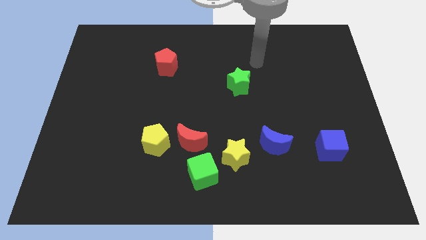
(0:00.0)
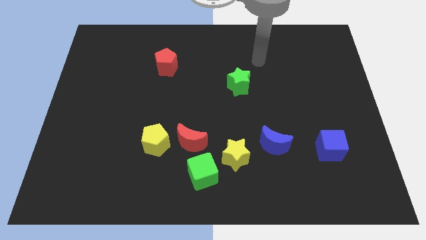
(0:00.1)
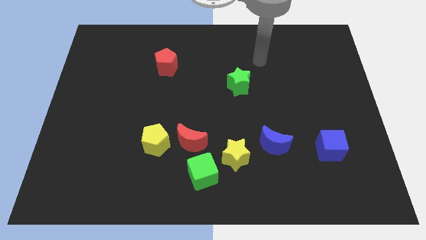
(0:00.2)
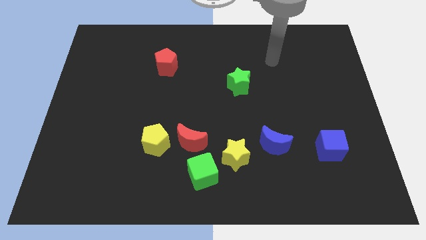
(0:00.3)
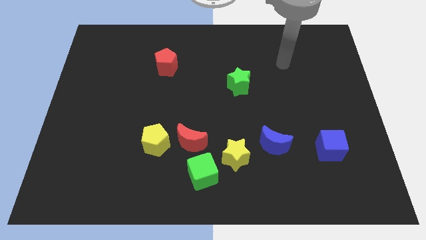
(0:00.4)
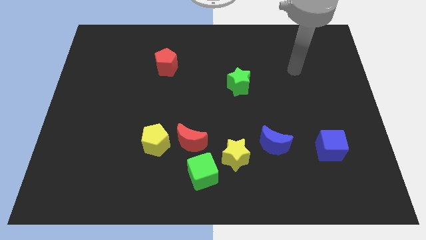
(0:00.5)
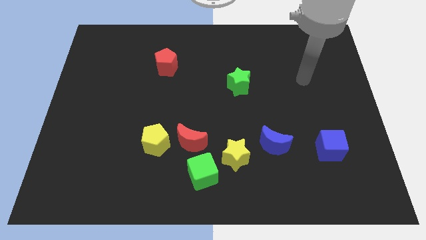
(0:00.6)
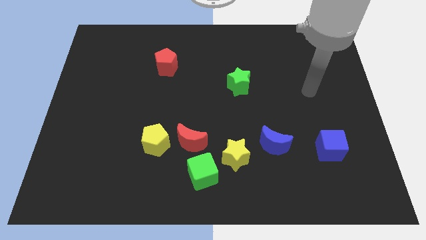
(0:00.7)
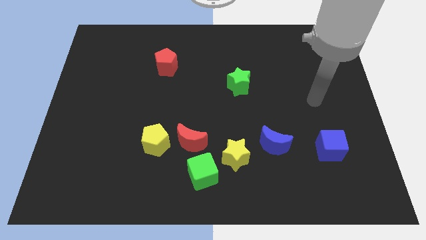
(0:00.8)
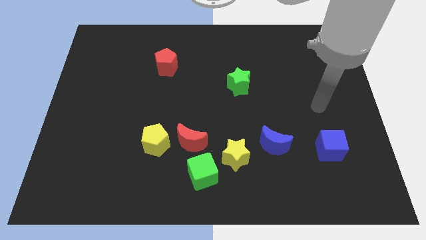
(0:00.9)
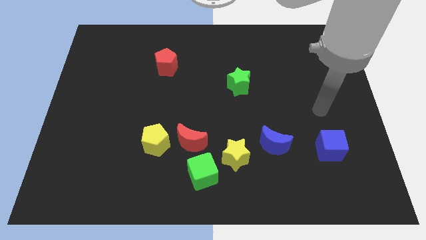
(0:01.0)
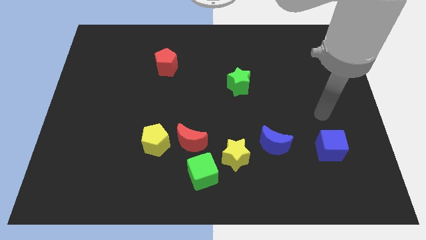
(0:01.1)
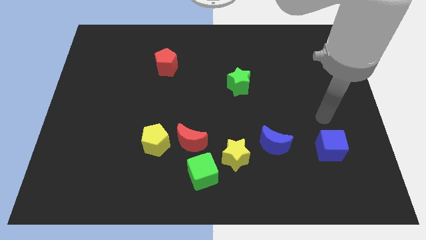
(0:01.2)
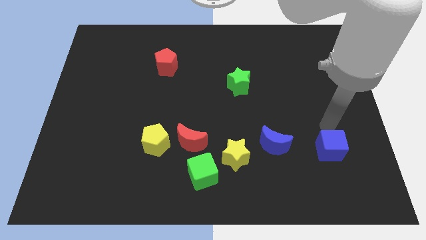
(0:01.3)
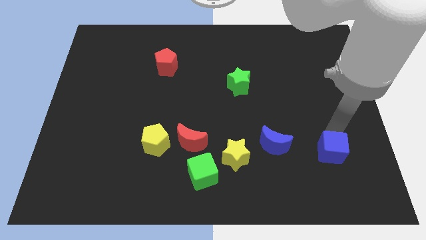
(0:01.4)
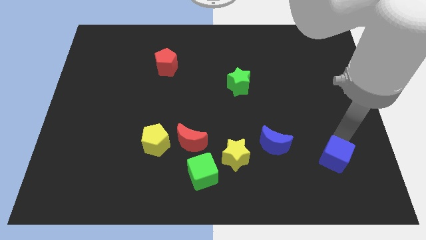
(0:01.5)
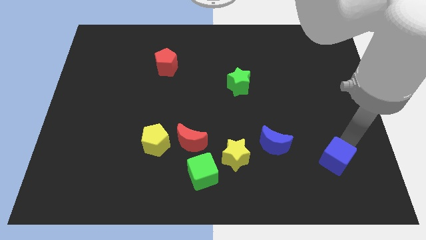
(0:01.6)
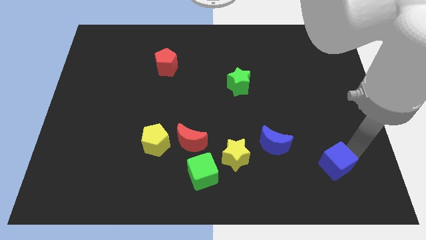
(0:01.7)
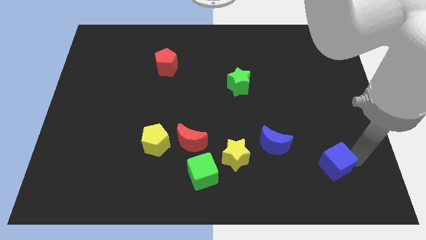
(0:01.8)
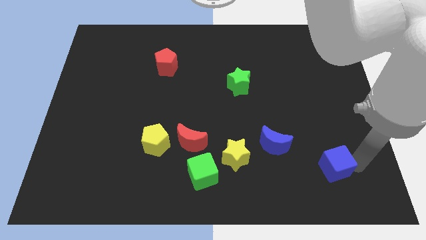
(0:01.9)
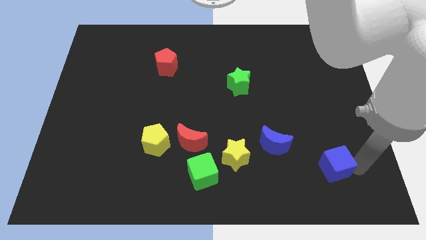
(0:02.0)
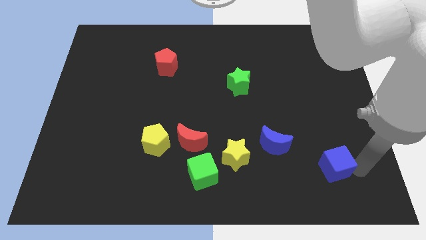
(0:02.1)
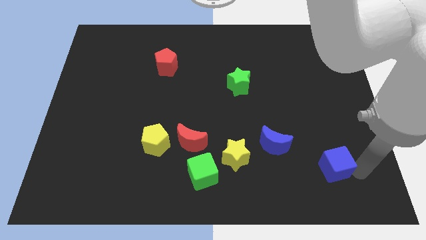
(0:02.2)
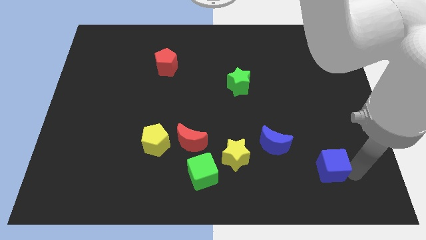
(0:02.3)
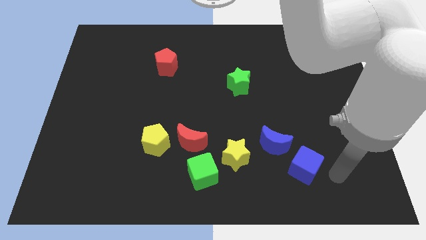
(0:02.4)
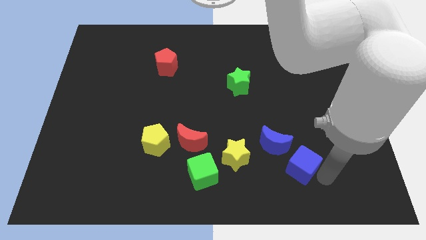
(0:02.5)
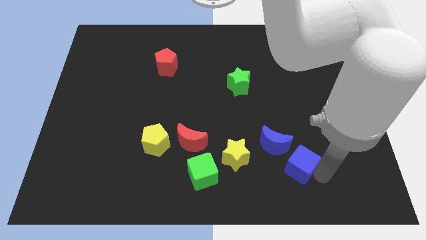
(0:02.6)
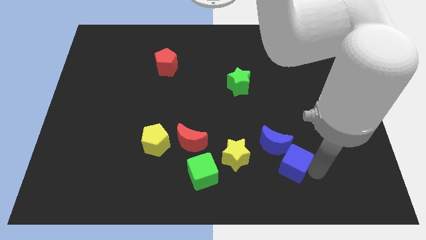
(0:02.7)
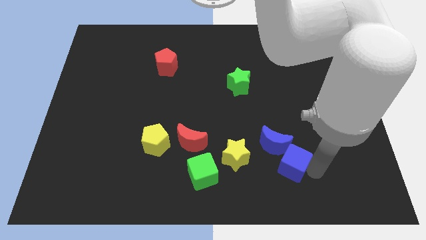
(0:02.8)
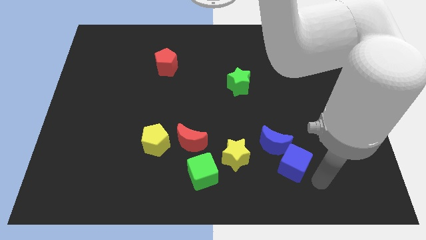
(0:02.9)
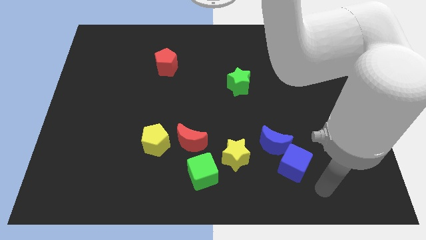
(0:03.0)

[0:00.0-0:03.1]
move the blue cube slightly into the right side of the blue crescent

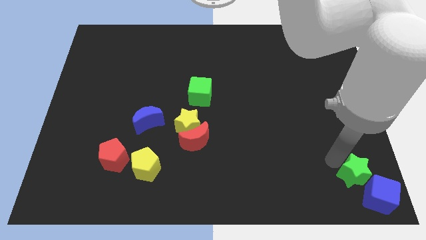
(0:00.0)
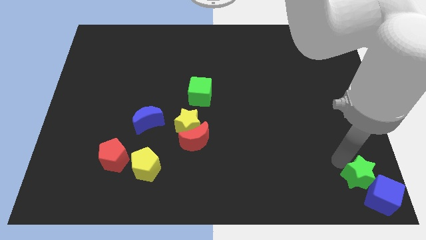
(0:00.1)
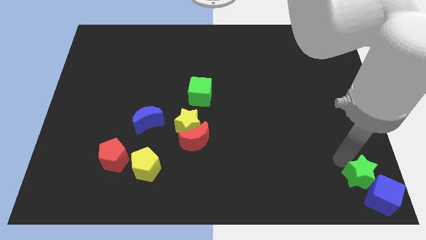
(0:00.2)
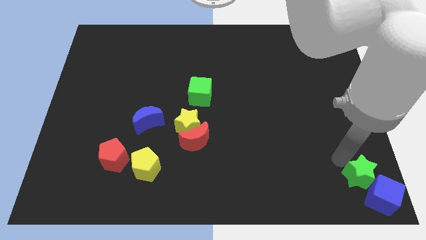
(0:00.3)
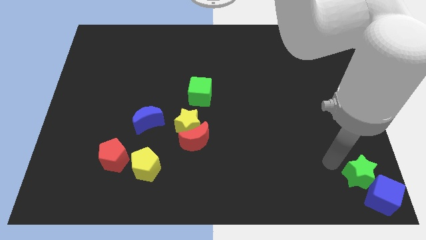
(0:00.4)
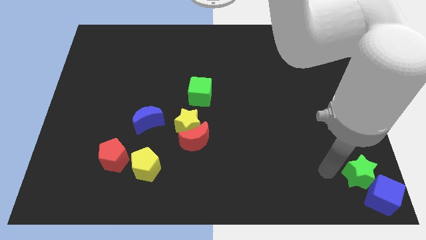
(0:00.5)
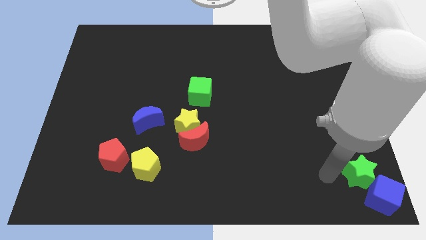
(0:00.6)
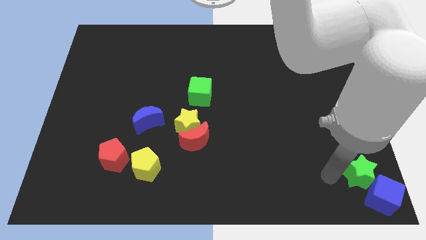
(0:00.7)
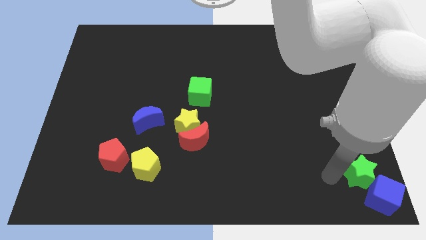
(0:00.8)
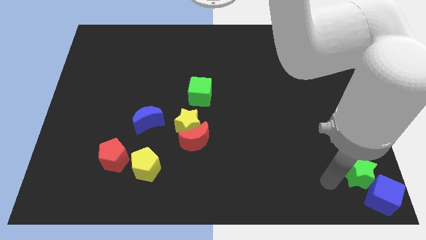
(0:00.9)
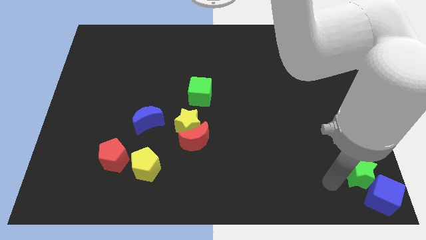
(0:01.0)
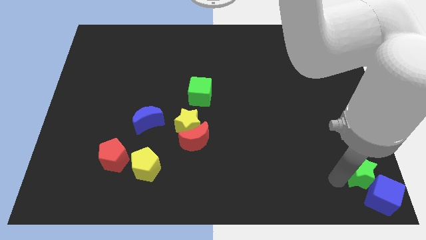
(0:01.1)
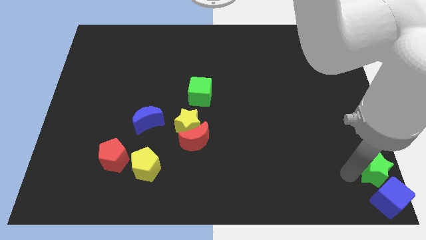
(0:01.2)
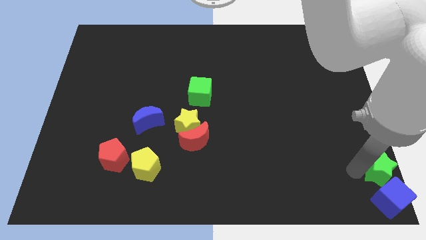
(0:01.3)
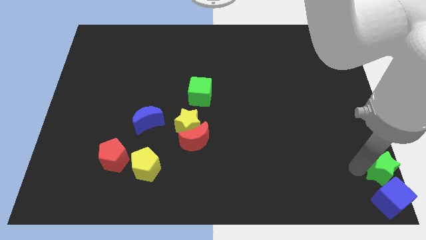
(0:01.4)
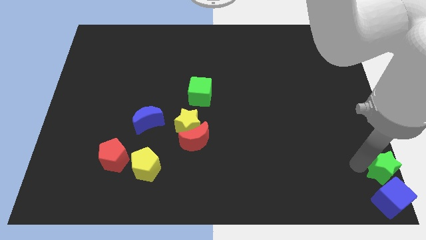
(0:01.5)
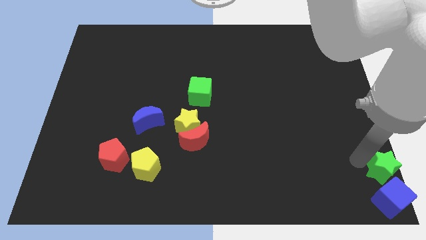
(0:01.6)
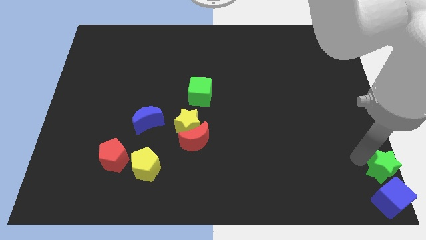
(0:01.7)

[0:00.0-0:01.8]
push green star and blue cube to the left of the board

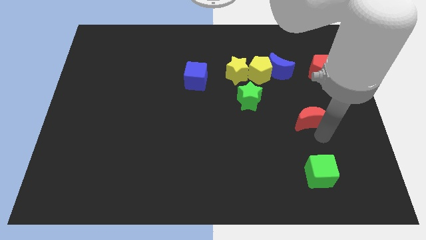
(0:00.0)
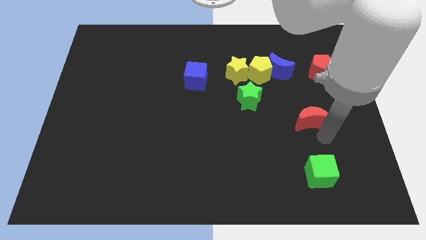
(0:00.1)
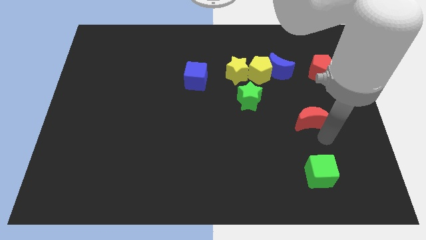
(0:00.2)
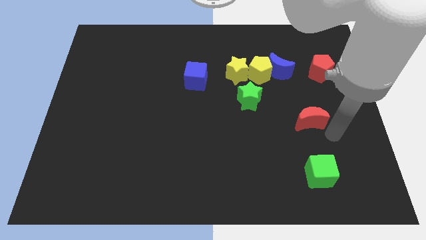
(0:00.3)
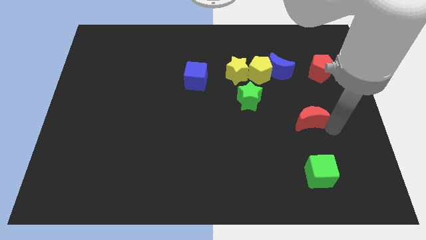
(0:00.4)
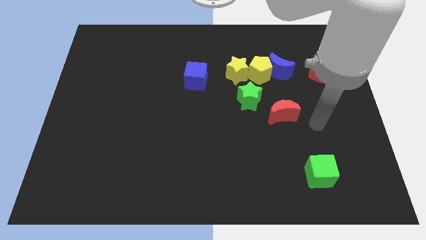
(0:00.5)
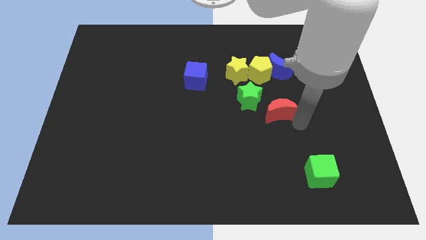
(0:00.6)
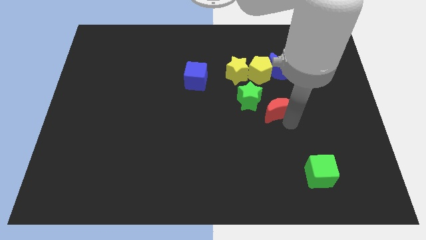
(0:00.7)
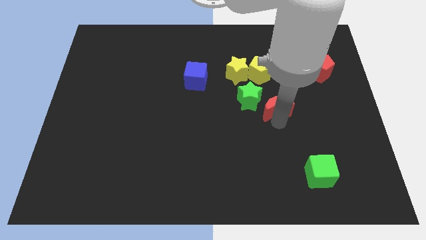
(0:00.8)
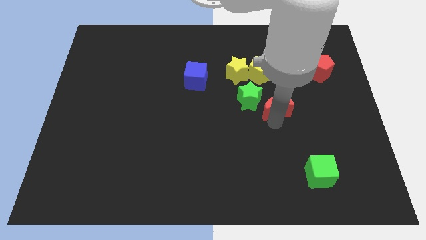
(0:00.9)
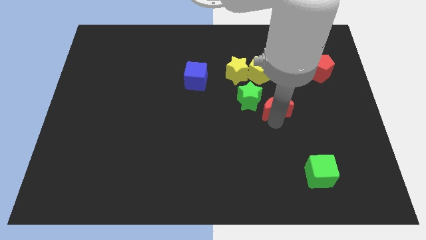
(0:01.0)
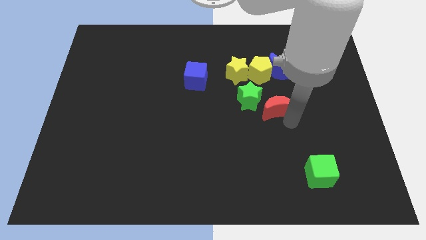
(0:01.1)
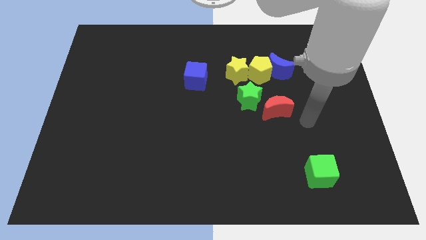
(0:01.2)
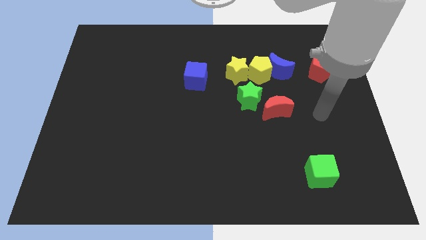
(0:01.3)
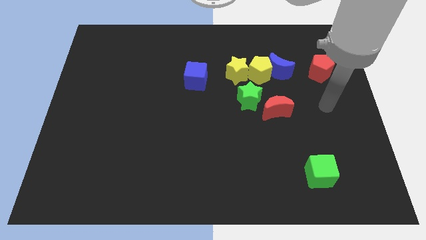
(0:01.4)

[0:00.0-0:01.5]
push the red crescent towards the green star

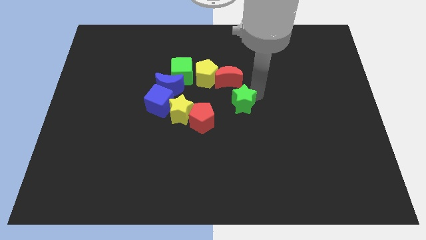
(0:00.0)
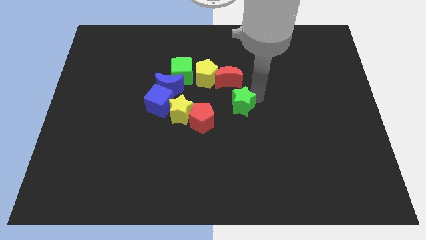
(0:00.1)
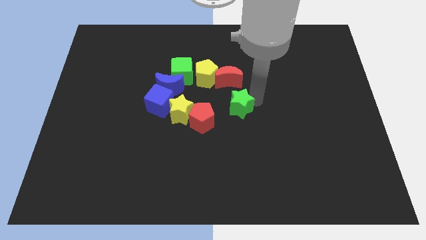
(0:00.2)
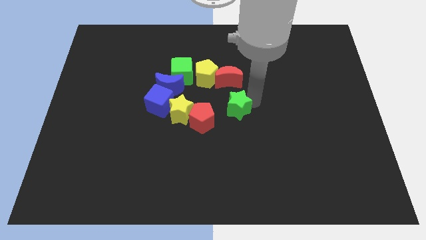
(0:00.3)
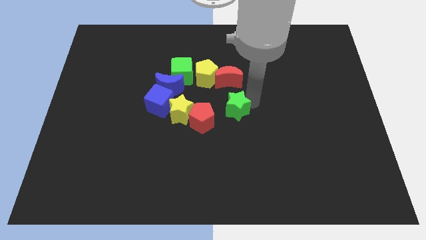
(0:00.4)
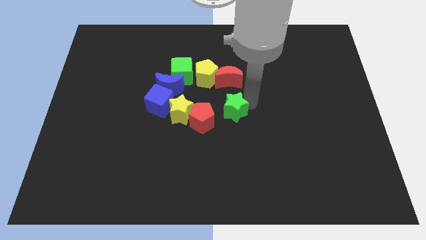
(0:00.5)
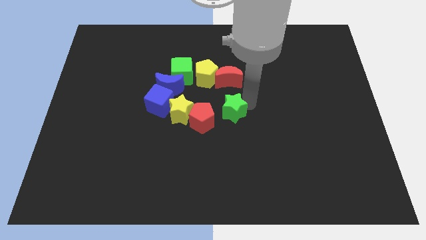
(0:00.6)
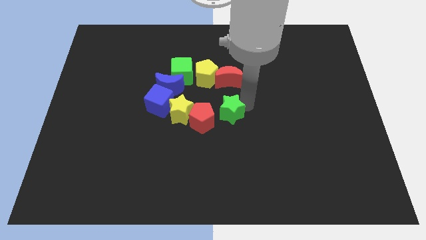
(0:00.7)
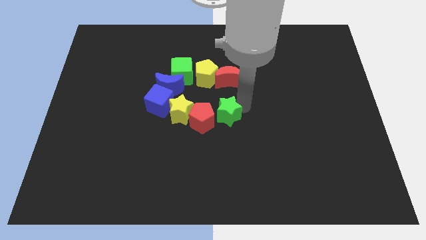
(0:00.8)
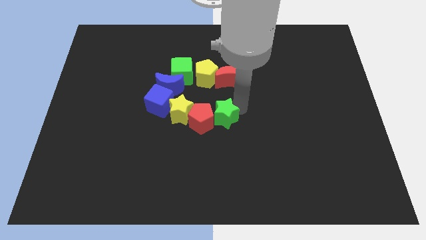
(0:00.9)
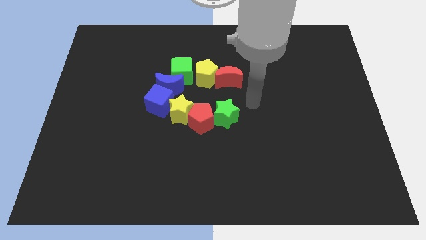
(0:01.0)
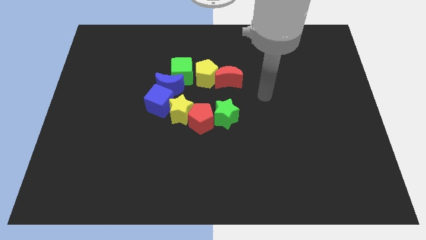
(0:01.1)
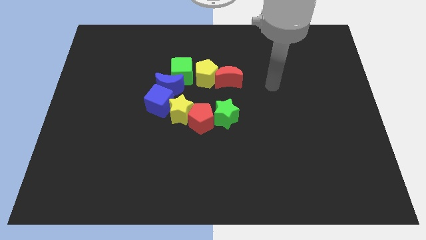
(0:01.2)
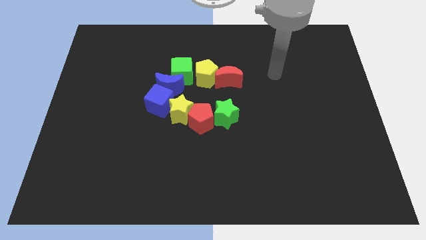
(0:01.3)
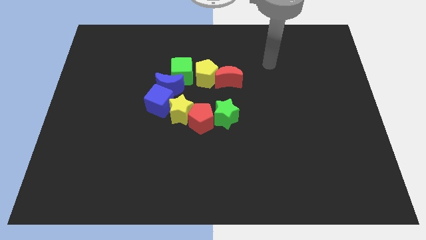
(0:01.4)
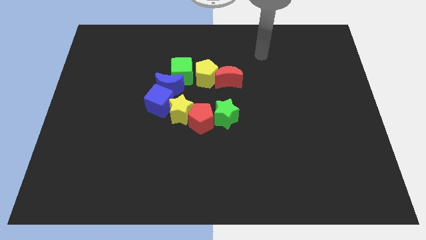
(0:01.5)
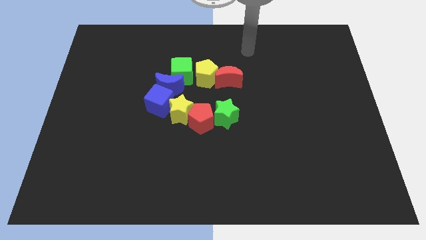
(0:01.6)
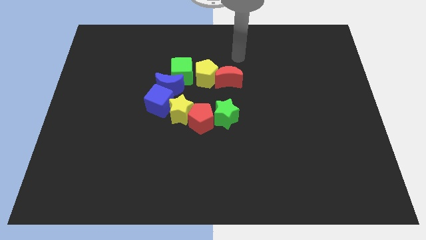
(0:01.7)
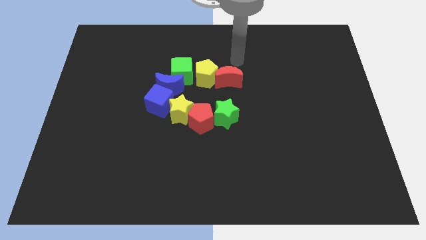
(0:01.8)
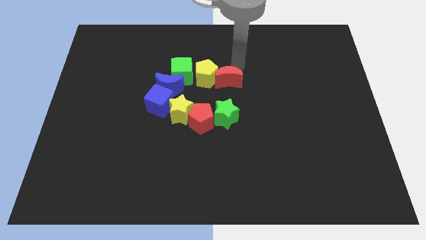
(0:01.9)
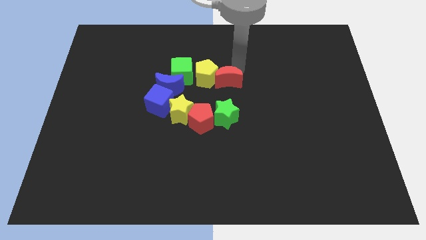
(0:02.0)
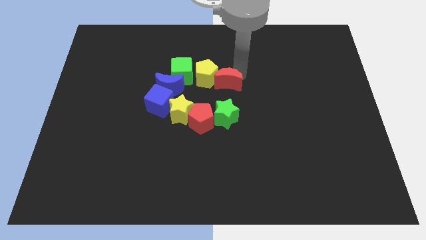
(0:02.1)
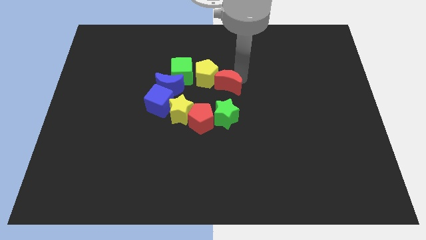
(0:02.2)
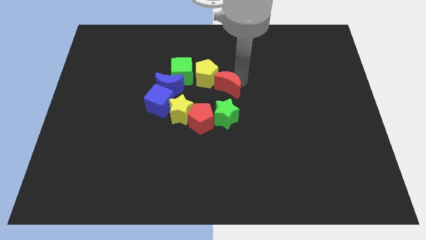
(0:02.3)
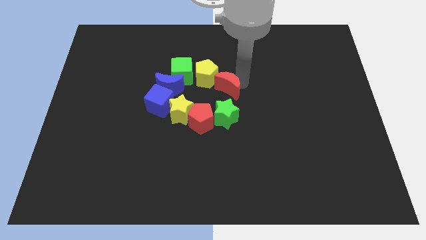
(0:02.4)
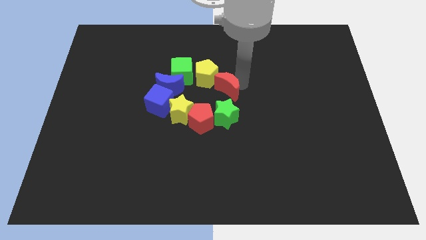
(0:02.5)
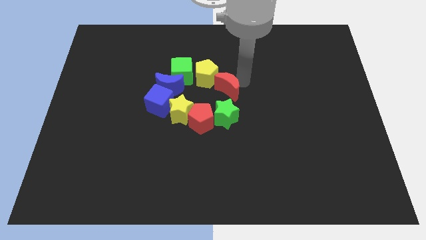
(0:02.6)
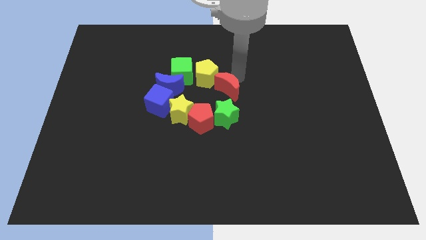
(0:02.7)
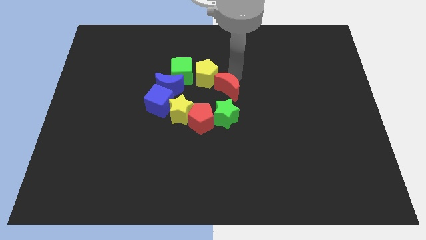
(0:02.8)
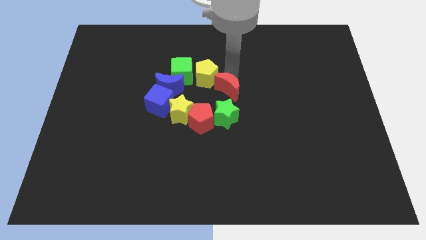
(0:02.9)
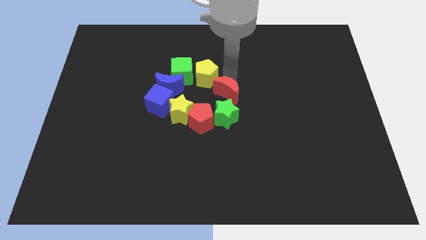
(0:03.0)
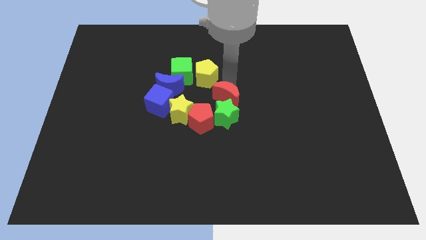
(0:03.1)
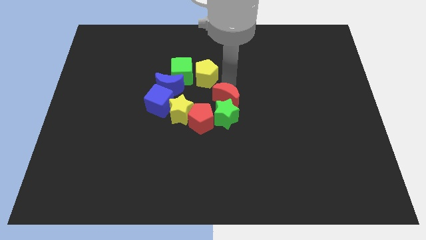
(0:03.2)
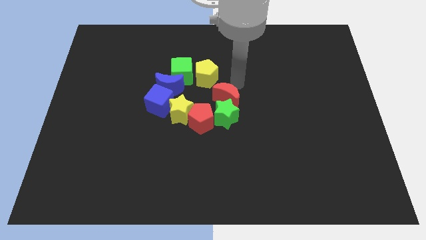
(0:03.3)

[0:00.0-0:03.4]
move the red crescent to the top of the green star
